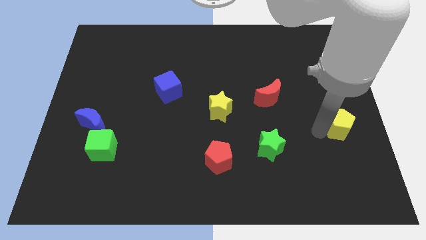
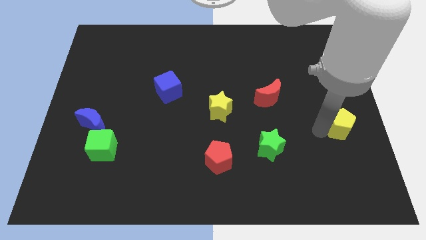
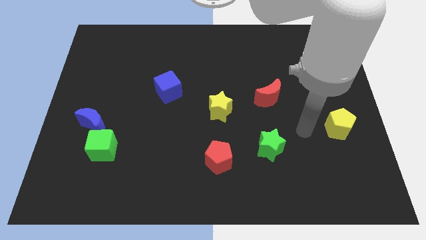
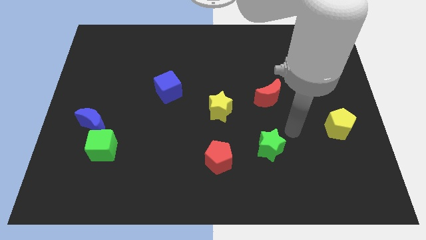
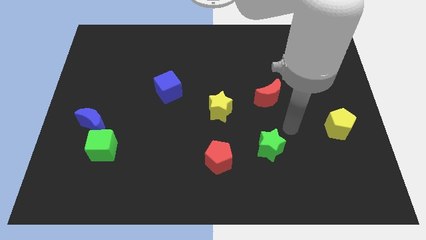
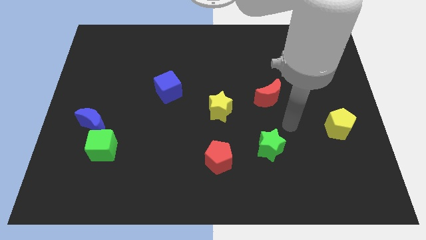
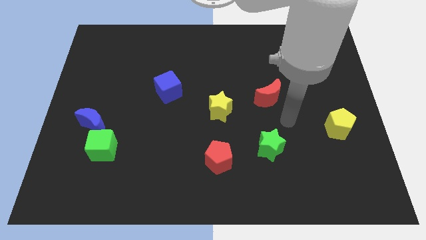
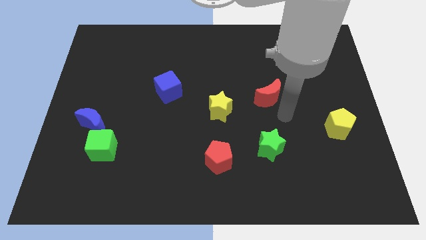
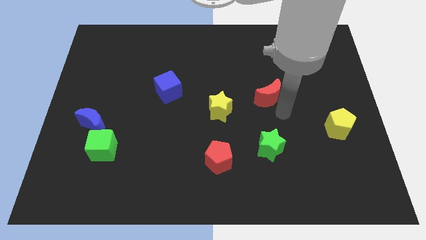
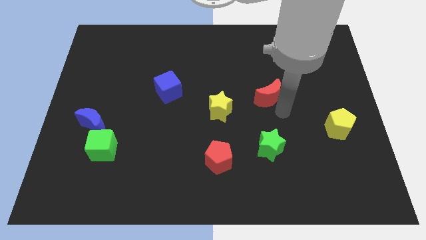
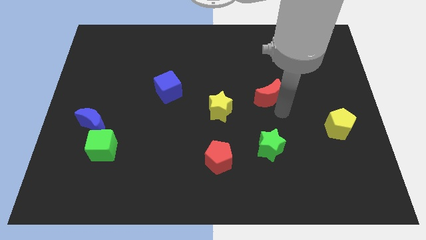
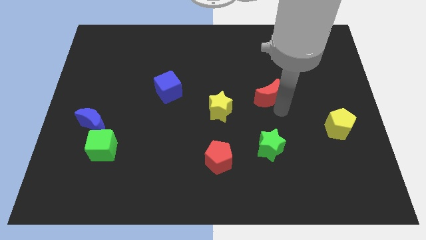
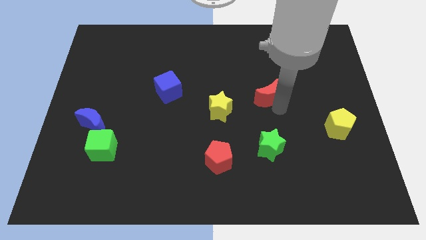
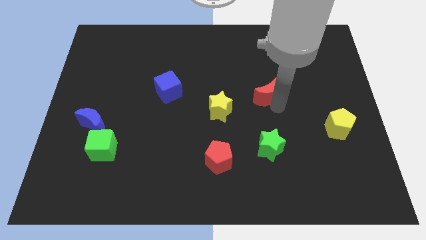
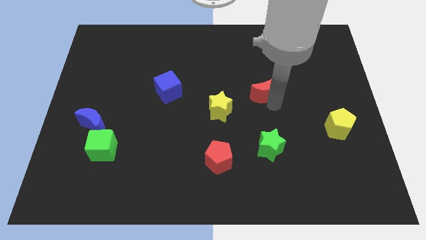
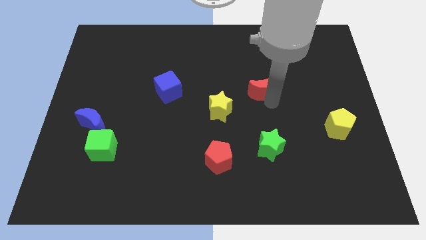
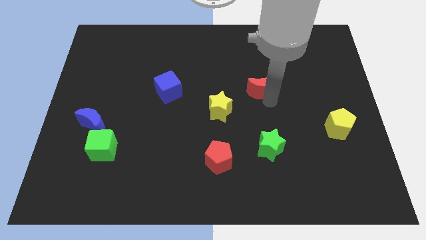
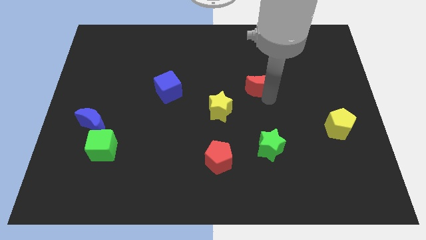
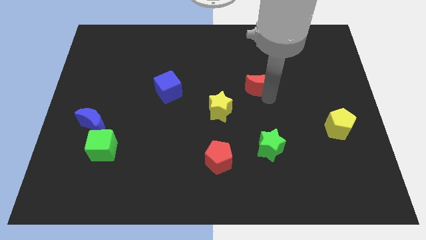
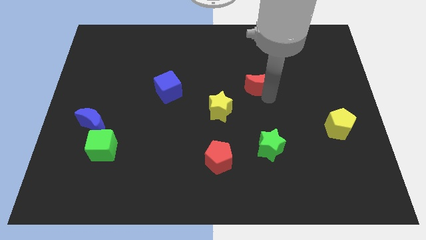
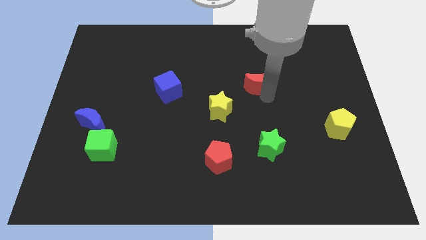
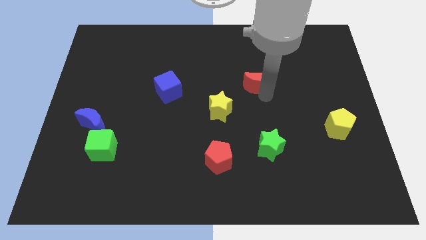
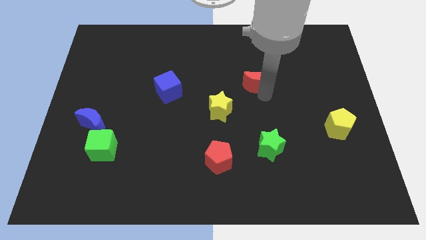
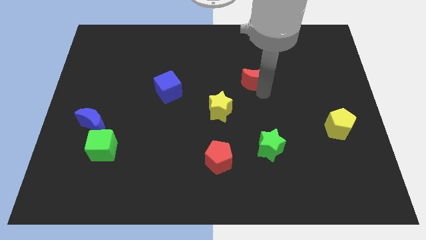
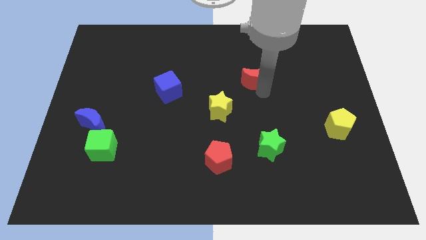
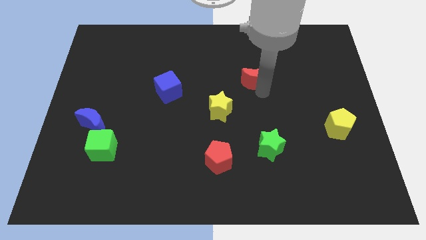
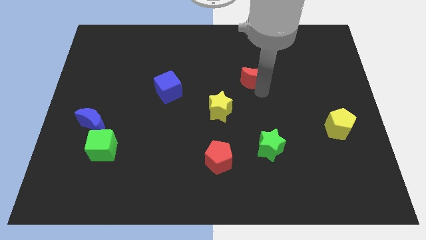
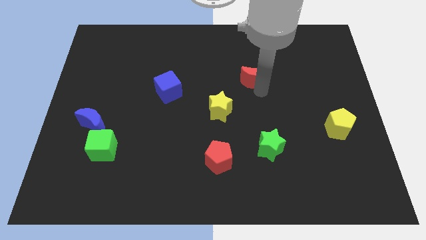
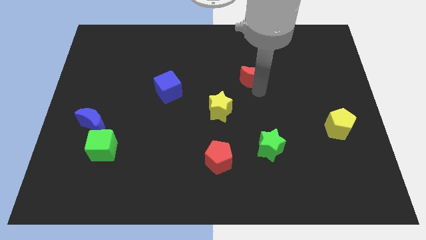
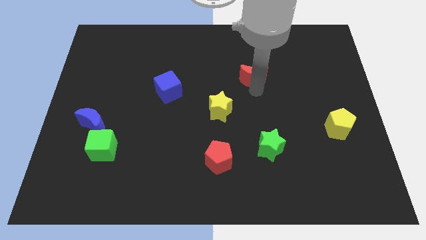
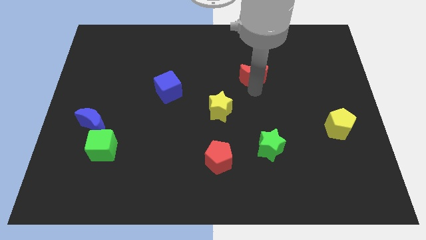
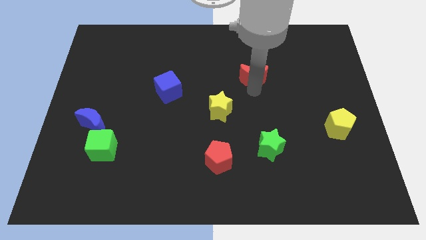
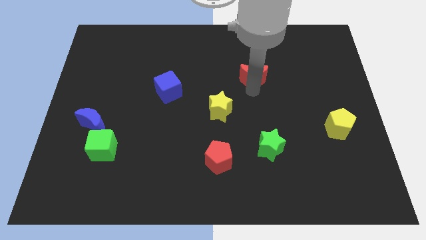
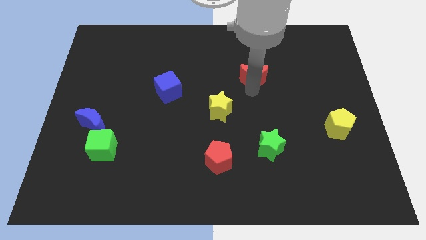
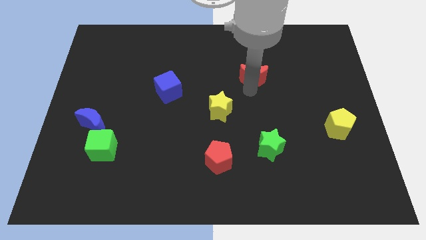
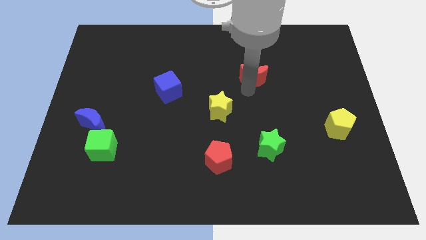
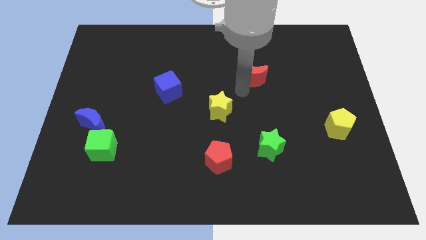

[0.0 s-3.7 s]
push the red moon slightly to the top of the board

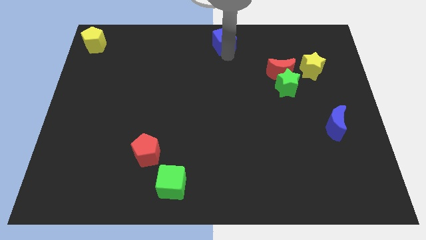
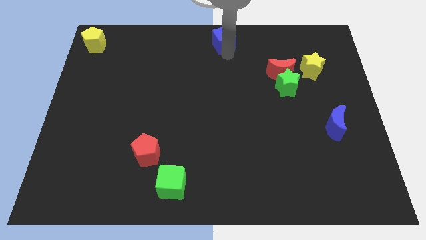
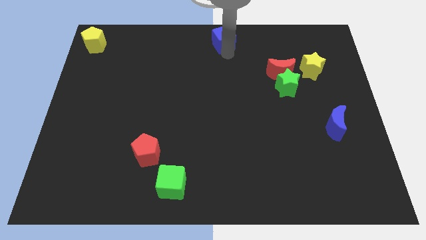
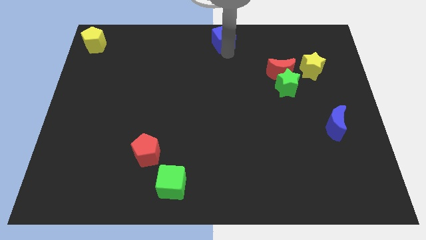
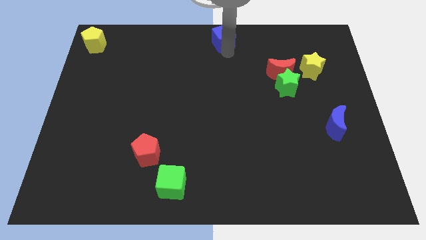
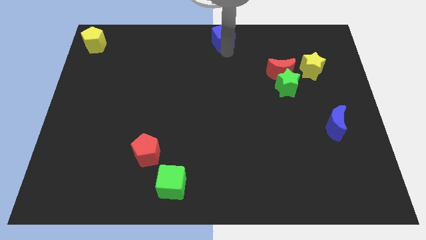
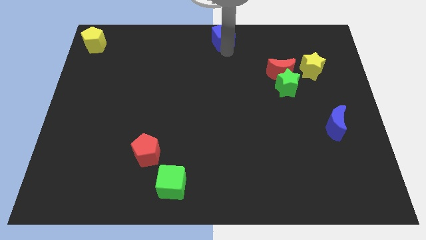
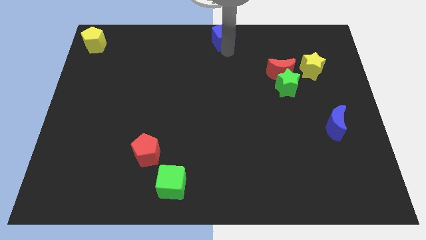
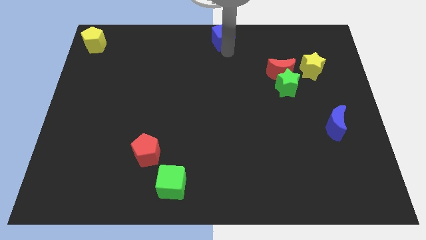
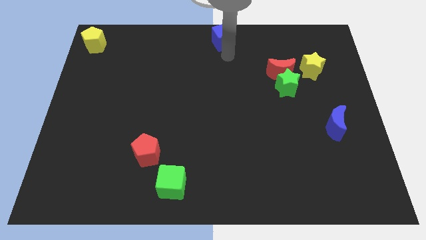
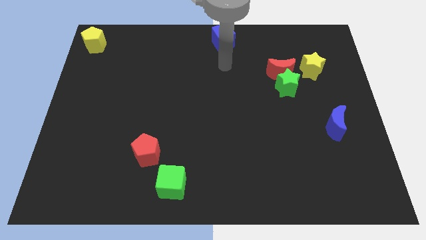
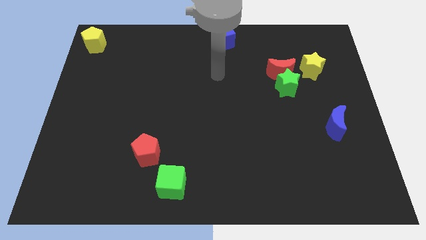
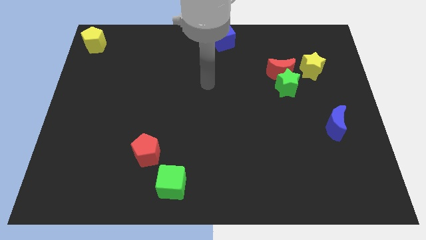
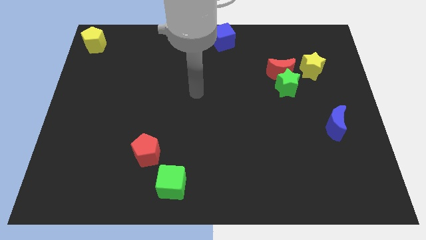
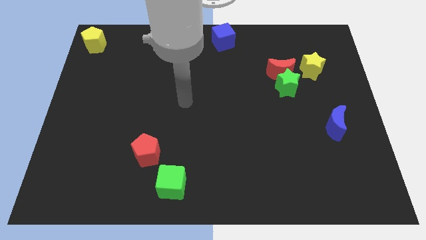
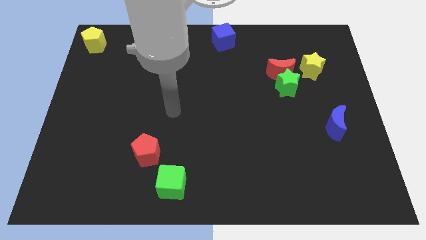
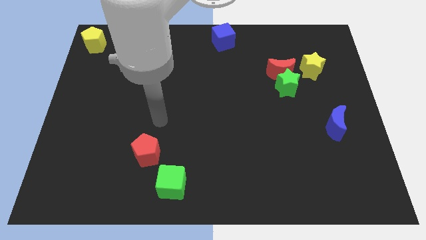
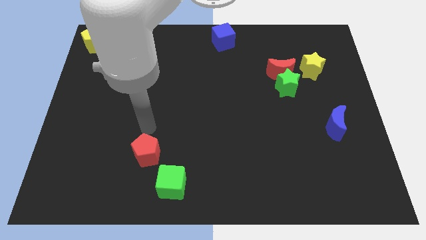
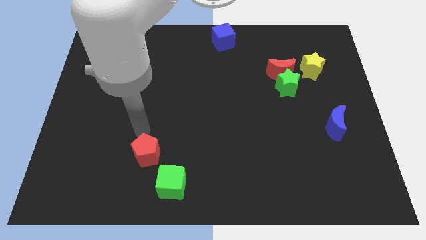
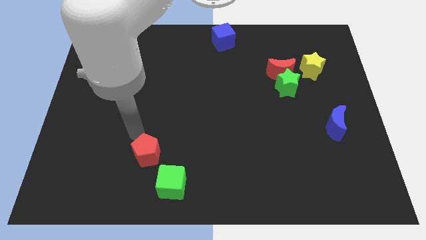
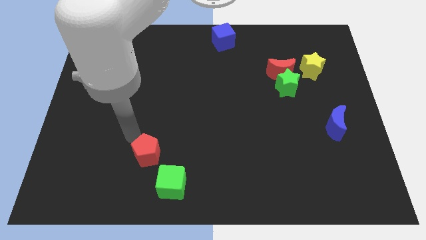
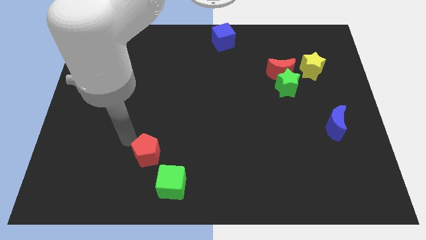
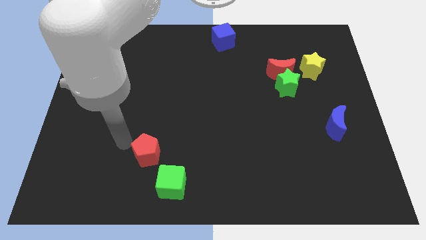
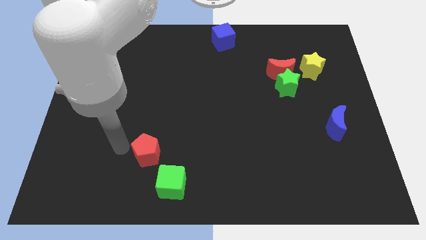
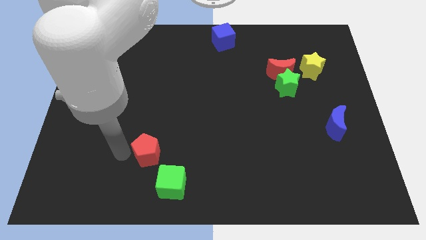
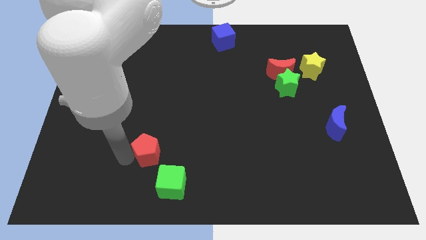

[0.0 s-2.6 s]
go near red pentagon

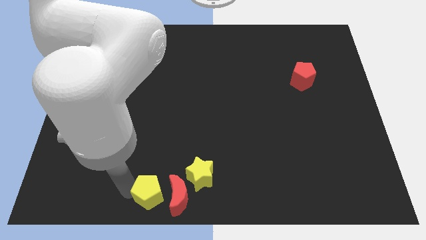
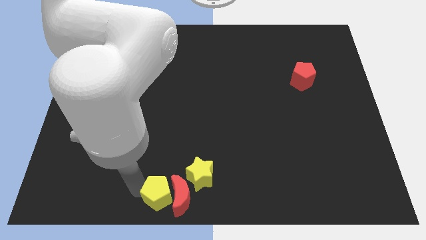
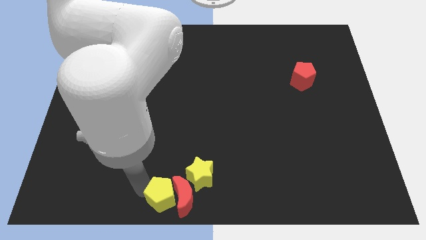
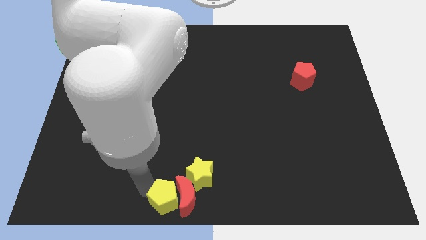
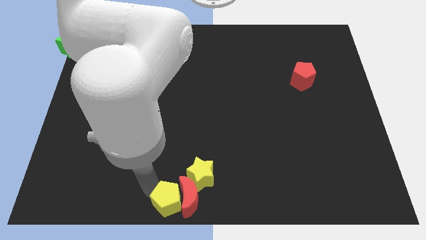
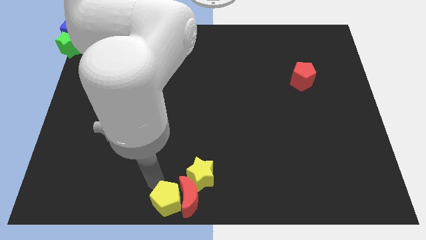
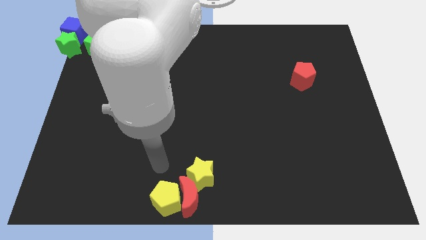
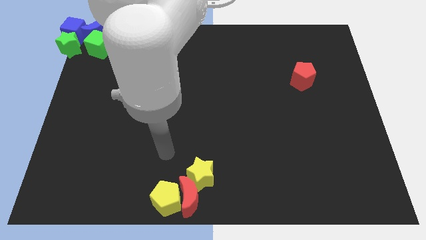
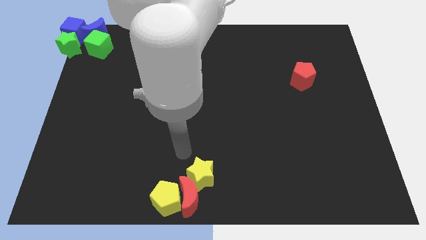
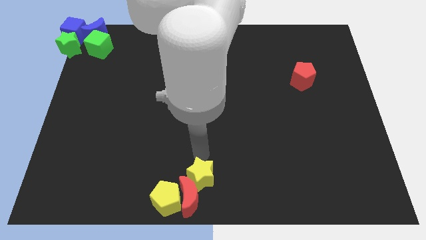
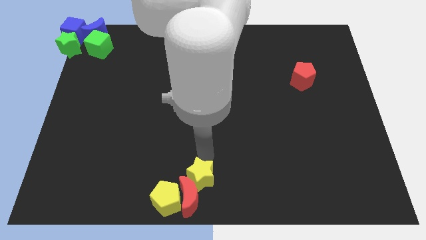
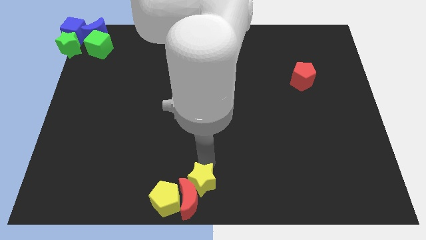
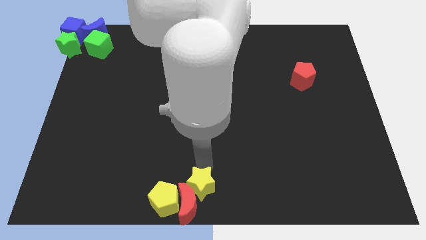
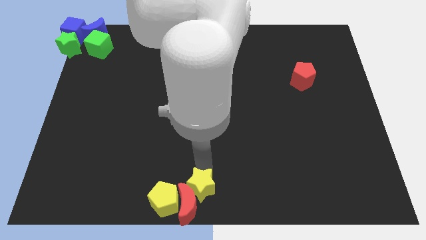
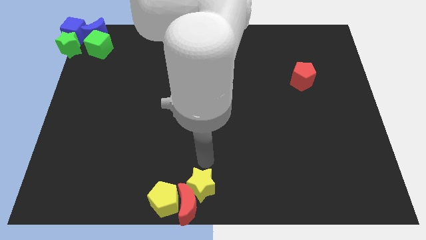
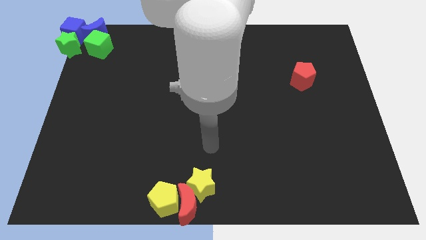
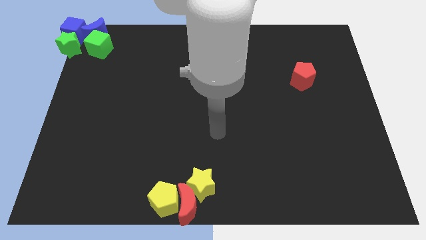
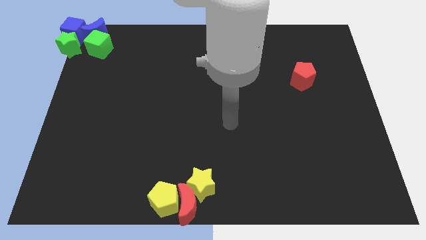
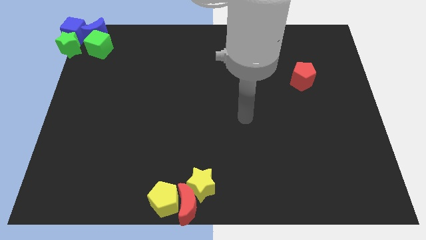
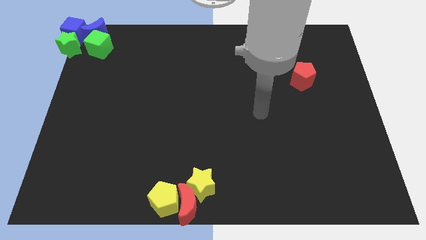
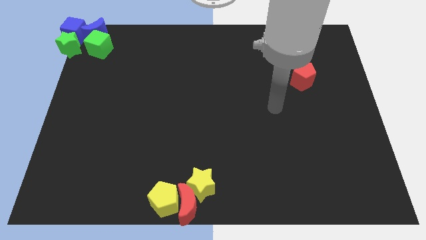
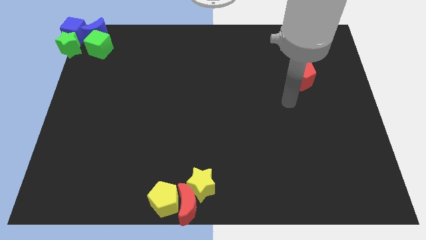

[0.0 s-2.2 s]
push the yellow pentagon into the red crescent at the bottom center of the board

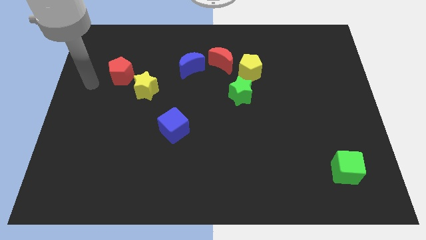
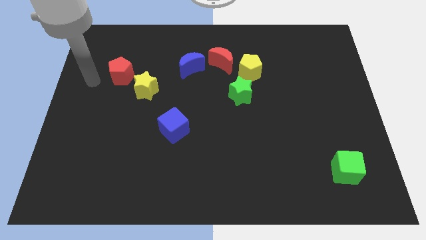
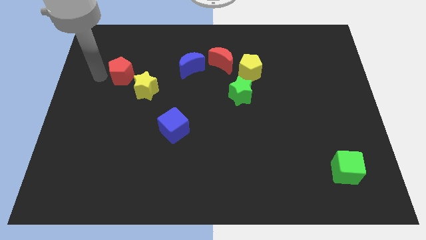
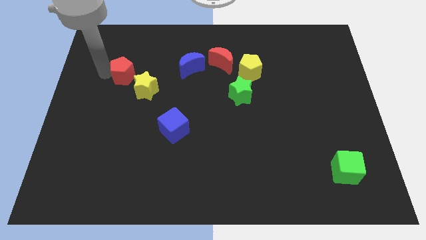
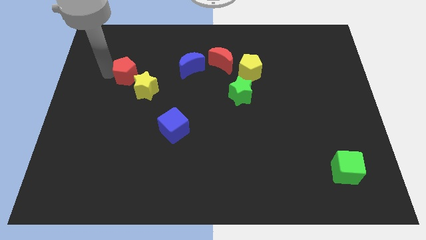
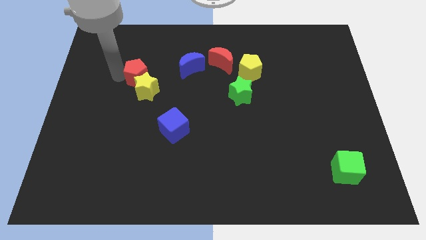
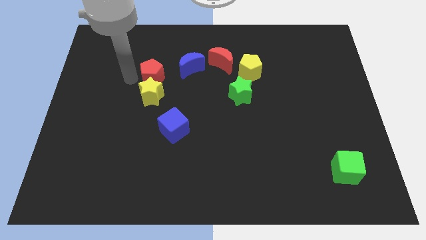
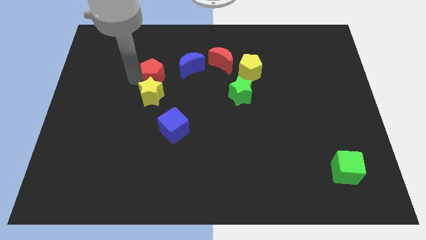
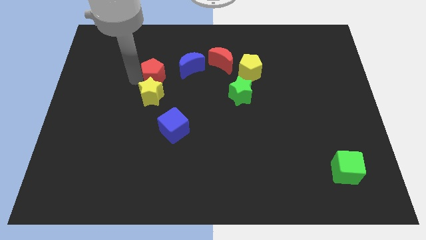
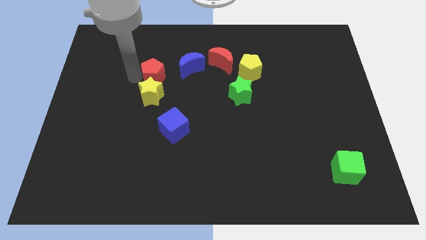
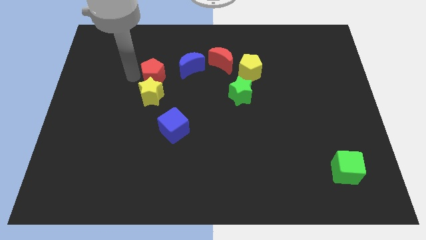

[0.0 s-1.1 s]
push the red pentagon to the top side of the yellow star
